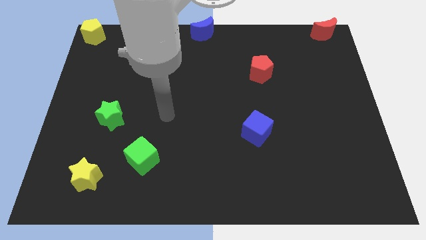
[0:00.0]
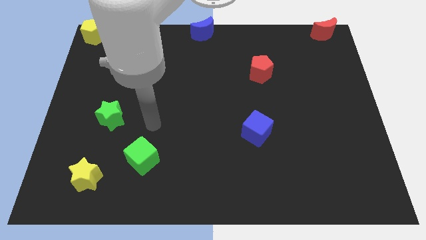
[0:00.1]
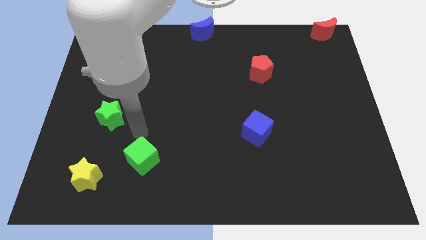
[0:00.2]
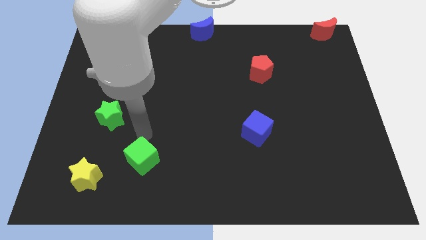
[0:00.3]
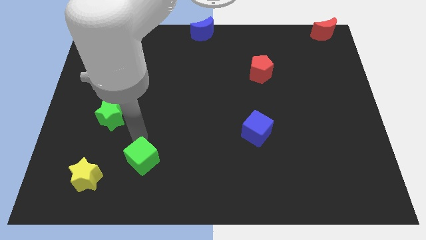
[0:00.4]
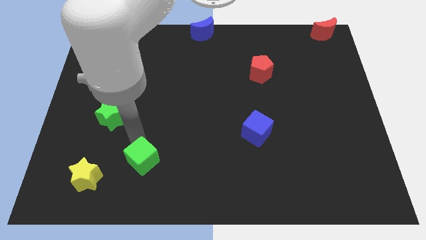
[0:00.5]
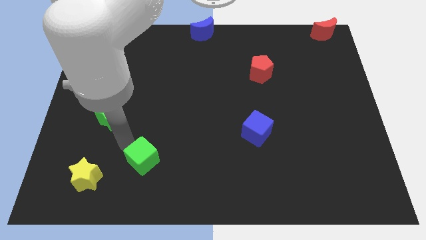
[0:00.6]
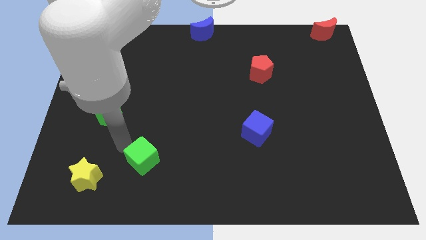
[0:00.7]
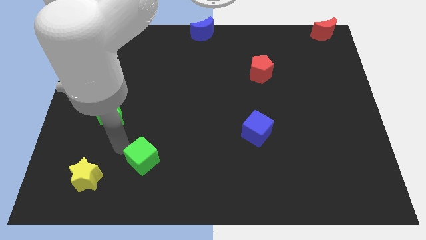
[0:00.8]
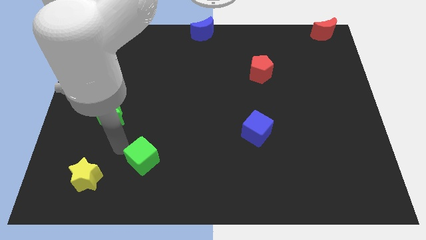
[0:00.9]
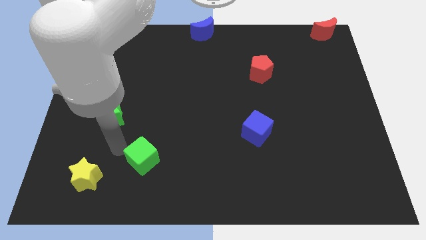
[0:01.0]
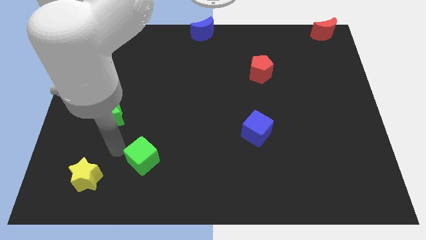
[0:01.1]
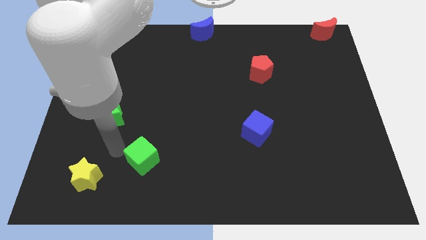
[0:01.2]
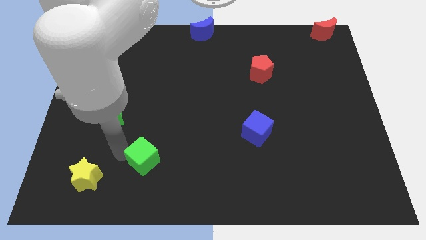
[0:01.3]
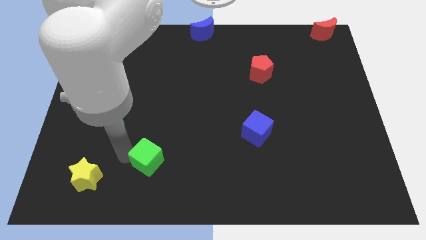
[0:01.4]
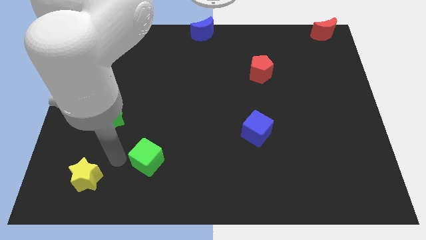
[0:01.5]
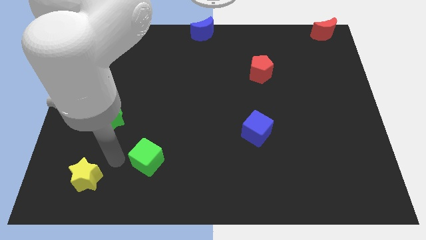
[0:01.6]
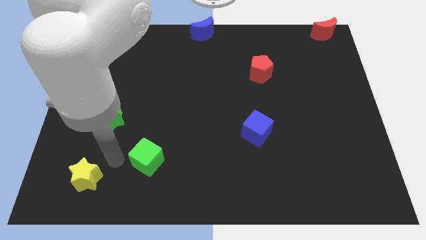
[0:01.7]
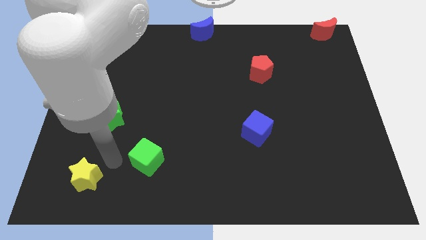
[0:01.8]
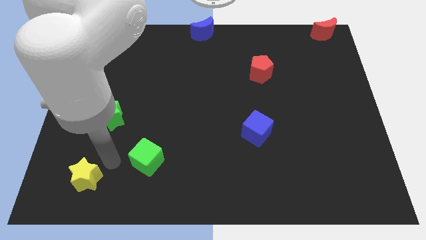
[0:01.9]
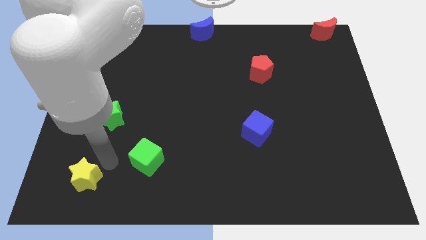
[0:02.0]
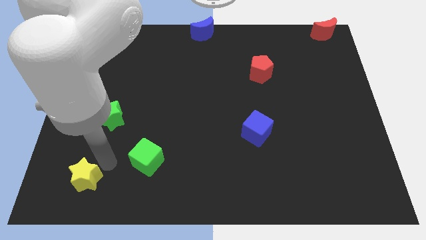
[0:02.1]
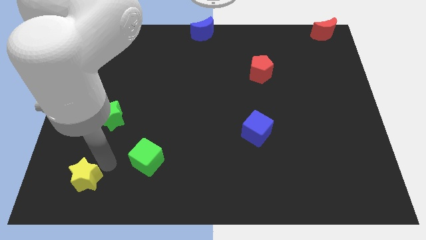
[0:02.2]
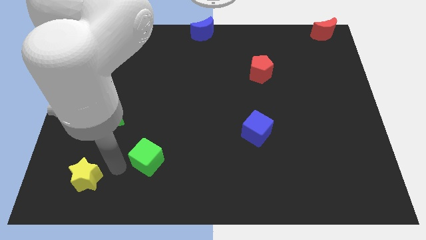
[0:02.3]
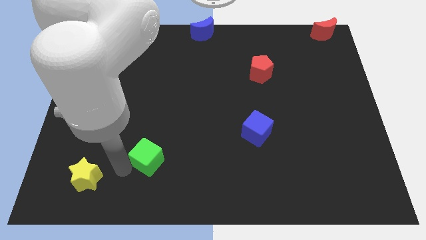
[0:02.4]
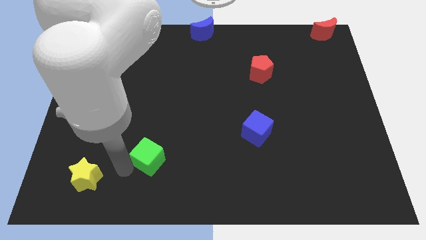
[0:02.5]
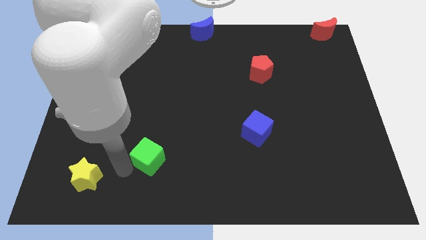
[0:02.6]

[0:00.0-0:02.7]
move green cube slightly towards right

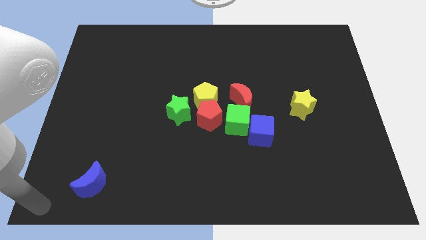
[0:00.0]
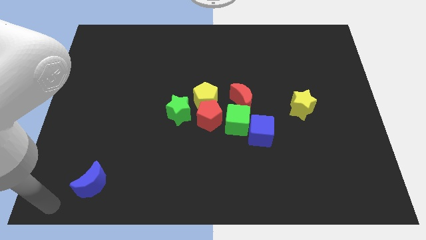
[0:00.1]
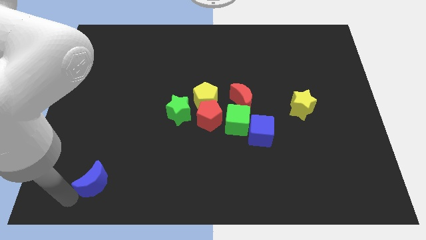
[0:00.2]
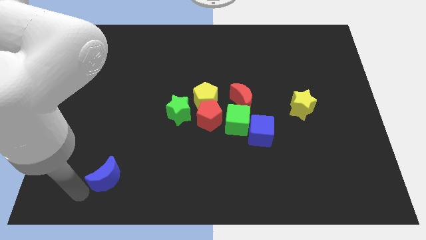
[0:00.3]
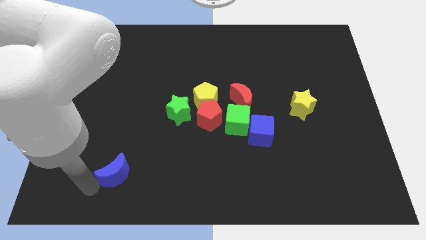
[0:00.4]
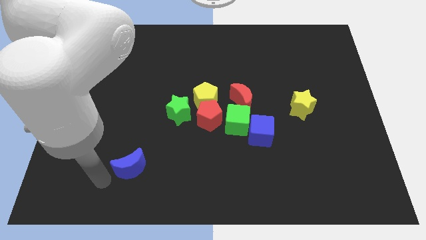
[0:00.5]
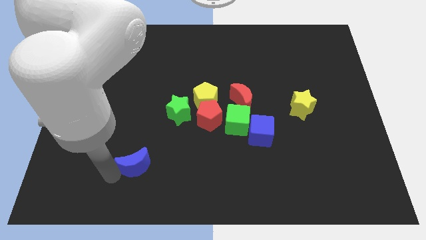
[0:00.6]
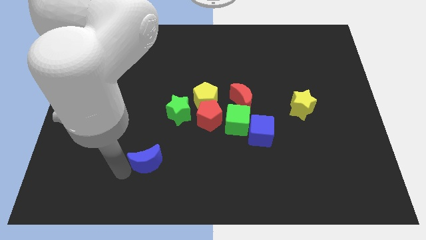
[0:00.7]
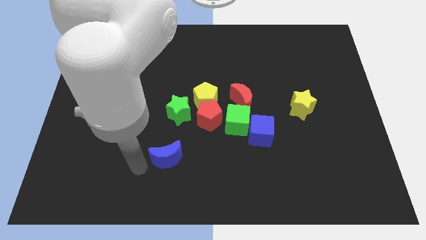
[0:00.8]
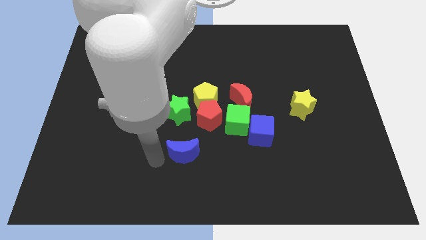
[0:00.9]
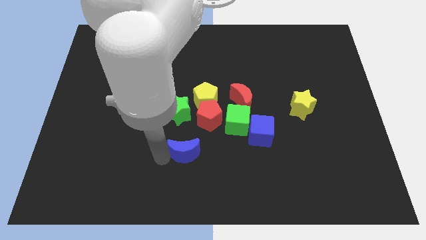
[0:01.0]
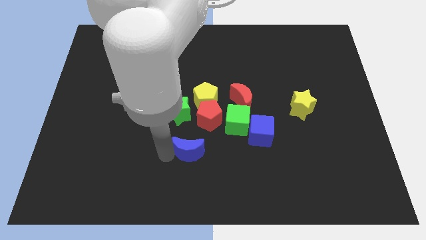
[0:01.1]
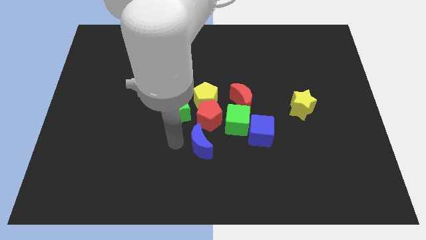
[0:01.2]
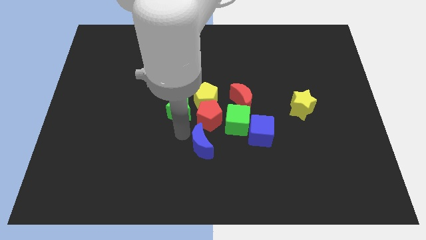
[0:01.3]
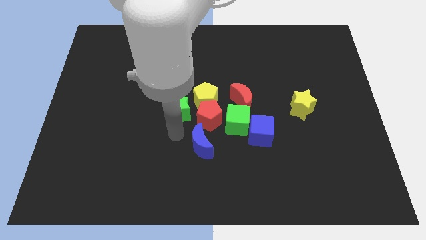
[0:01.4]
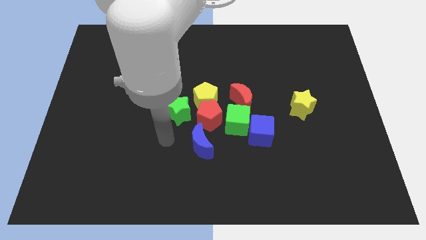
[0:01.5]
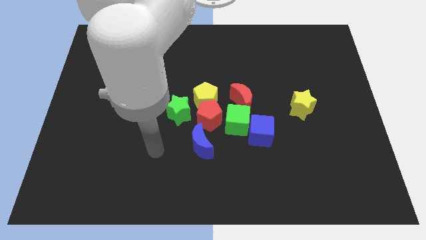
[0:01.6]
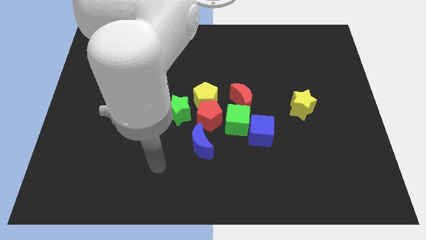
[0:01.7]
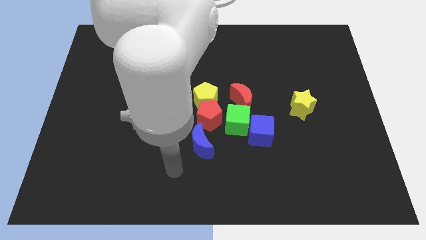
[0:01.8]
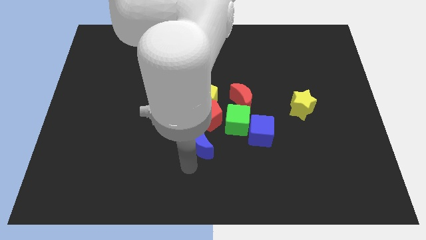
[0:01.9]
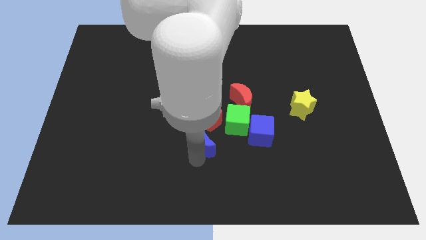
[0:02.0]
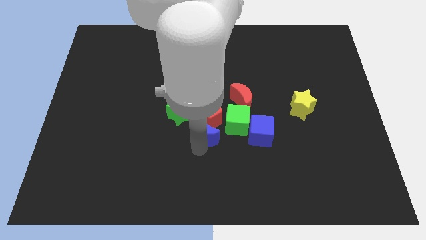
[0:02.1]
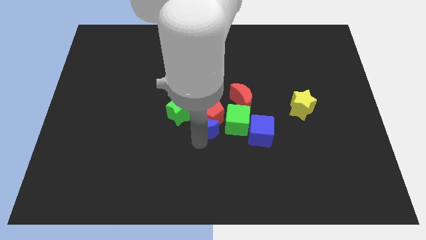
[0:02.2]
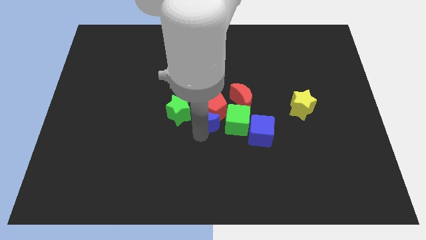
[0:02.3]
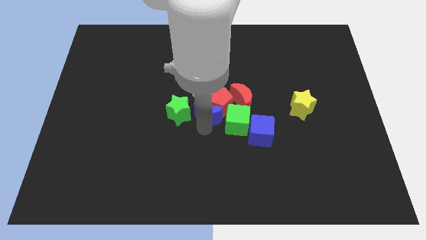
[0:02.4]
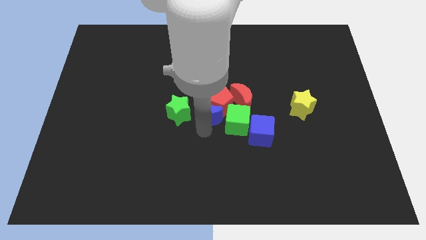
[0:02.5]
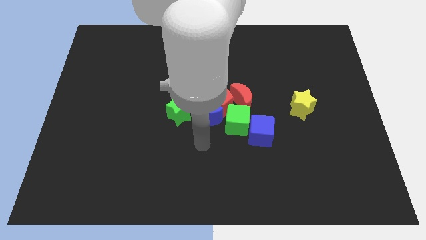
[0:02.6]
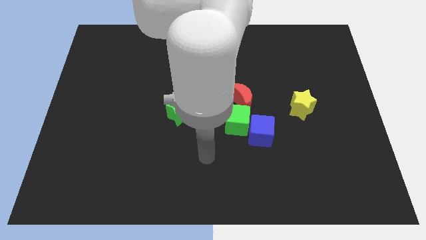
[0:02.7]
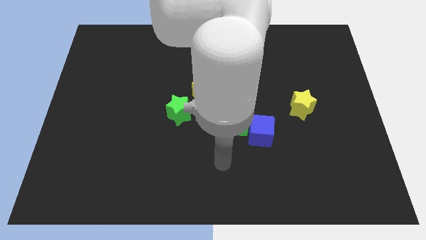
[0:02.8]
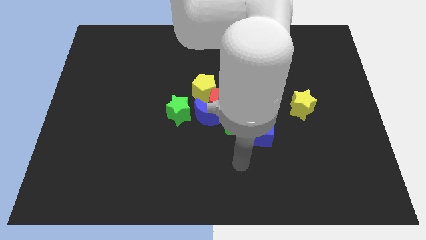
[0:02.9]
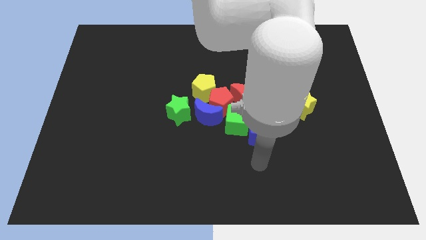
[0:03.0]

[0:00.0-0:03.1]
place blue moon in between green blocks

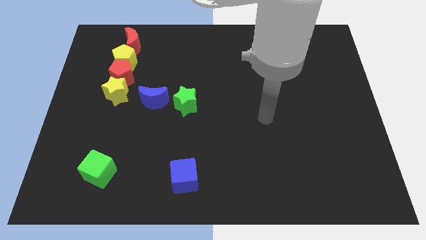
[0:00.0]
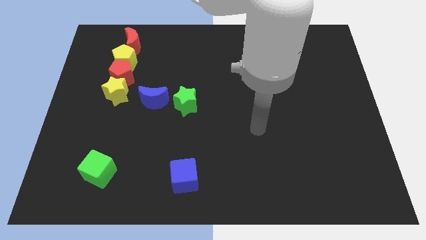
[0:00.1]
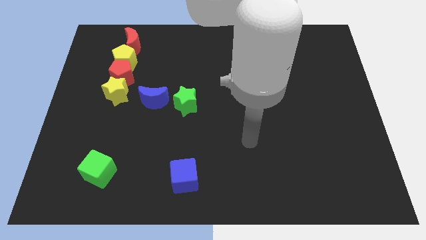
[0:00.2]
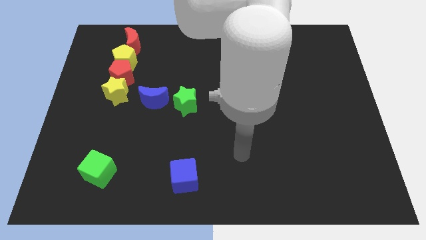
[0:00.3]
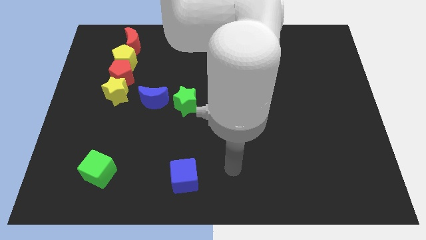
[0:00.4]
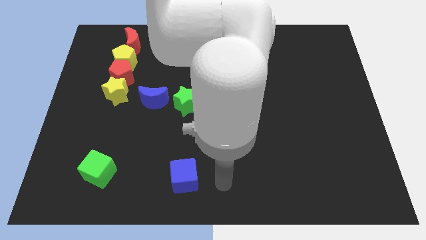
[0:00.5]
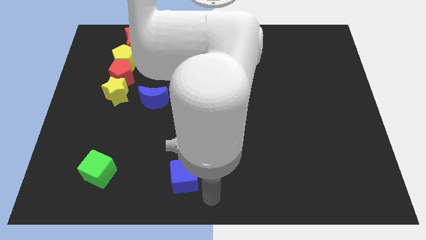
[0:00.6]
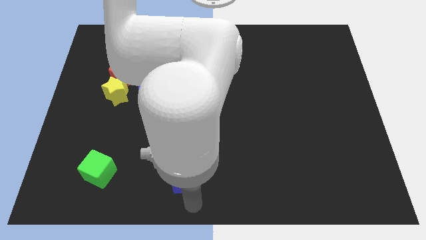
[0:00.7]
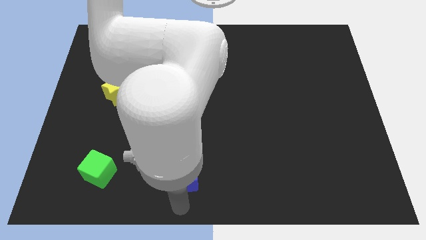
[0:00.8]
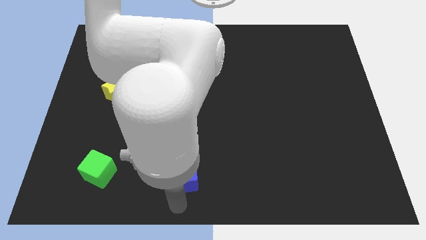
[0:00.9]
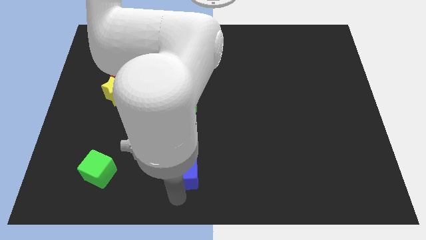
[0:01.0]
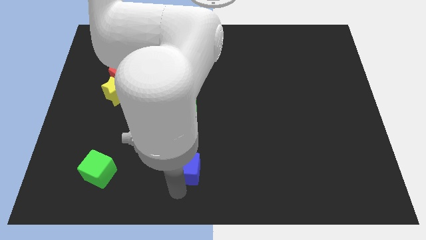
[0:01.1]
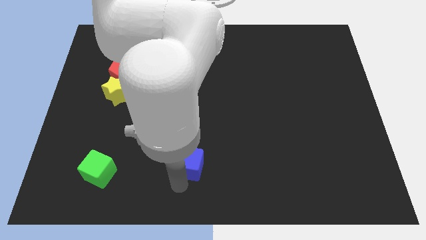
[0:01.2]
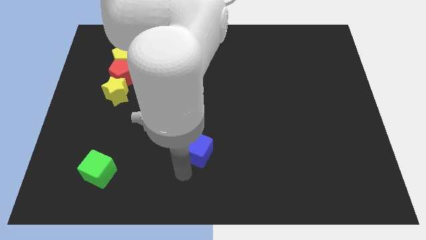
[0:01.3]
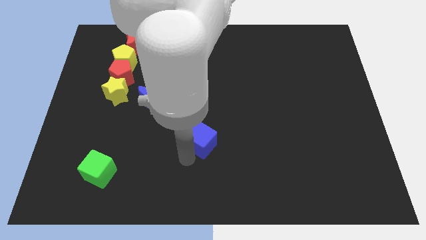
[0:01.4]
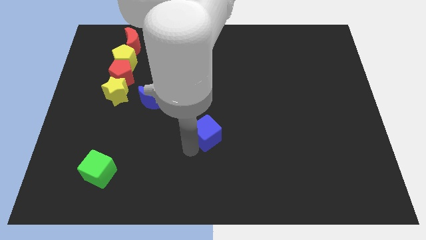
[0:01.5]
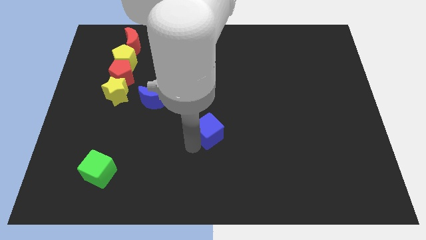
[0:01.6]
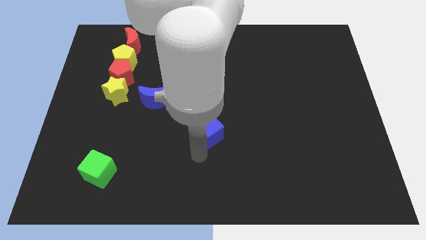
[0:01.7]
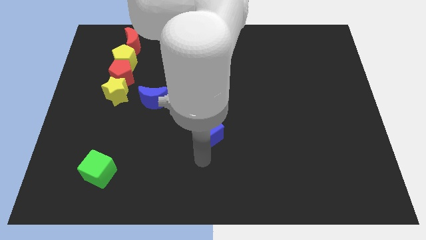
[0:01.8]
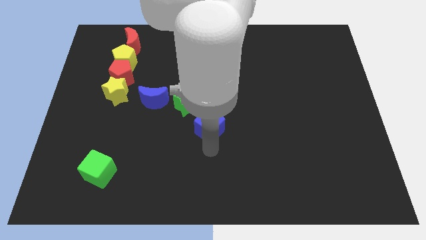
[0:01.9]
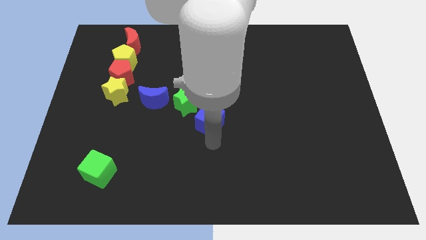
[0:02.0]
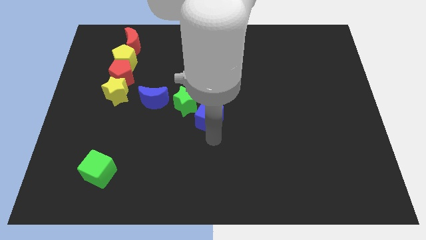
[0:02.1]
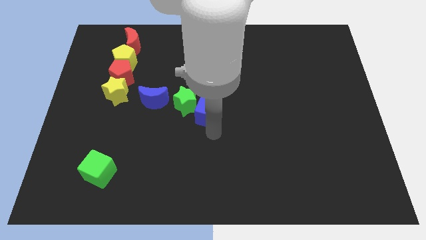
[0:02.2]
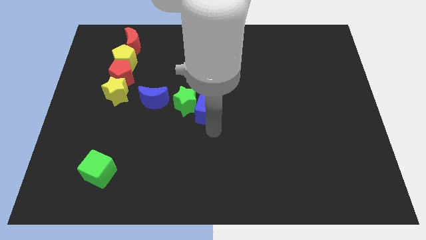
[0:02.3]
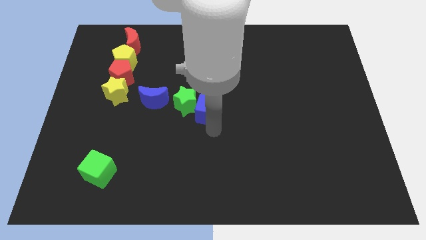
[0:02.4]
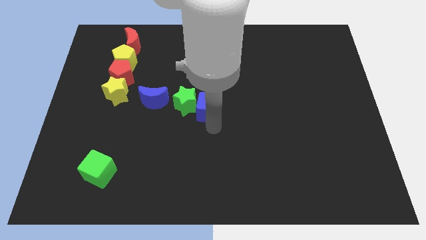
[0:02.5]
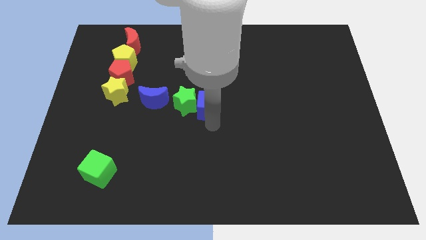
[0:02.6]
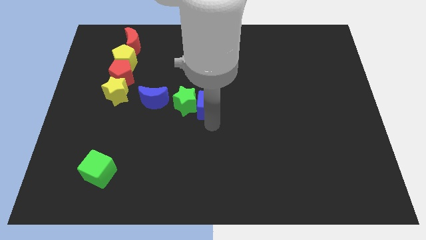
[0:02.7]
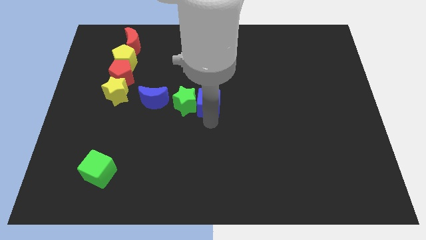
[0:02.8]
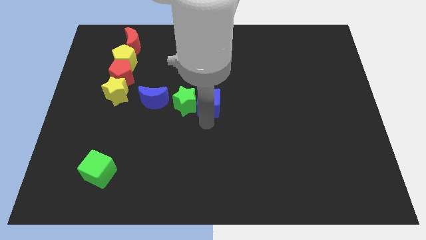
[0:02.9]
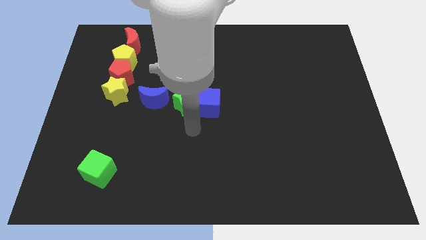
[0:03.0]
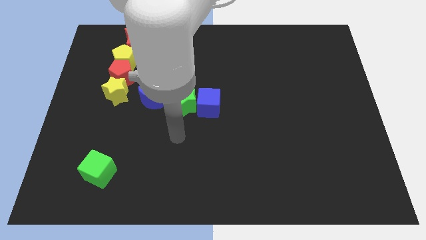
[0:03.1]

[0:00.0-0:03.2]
move the blue cube right of the green star

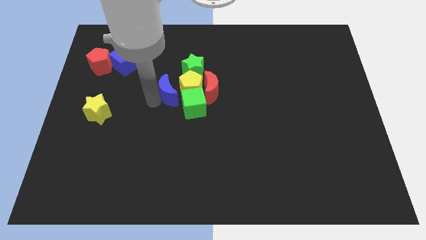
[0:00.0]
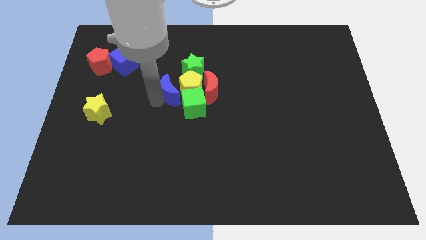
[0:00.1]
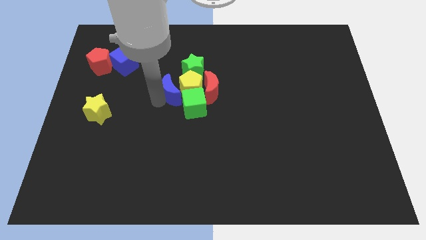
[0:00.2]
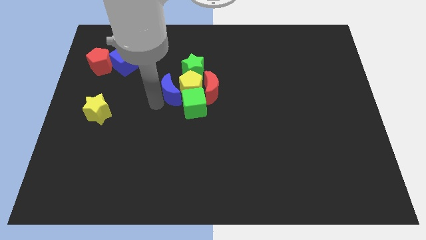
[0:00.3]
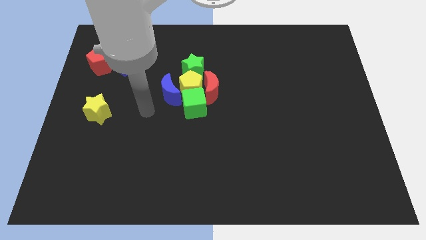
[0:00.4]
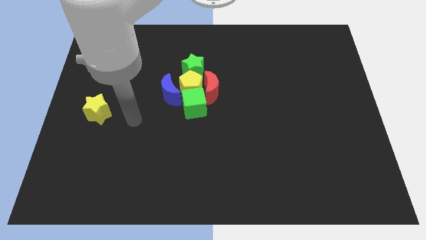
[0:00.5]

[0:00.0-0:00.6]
slightly move the blue crescent to the right side
